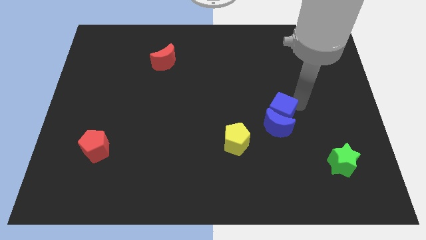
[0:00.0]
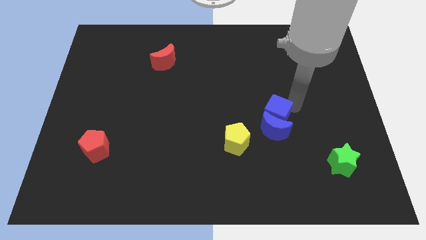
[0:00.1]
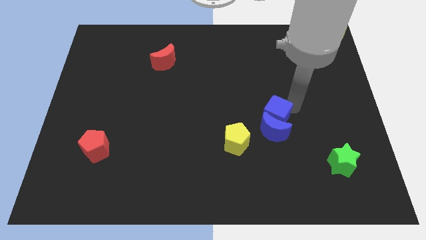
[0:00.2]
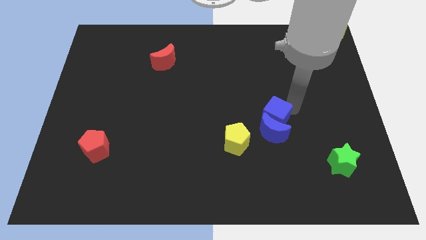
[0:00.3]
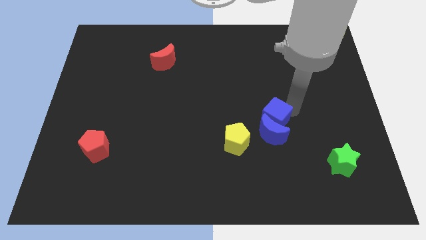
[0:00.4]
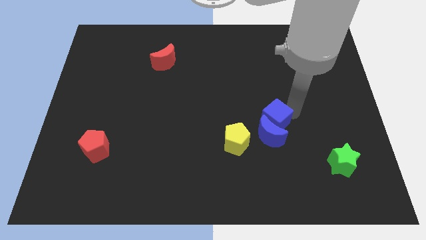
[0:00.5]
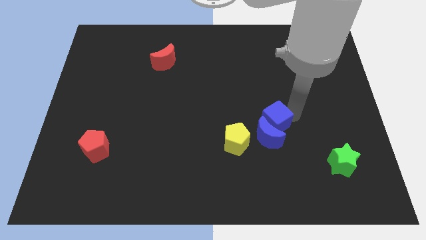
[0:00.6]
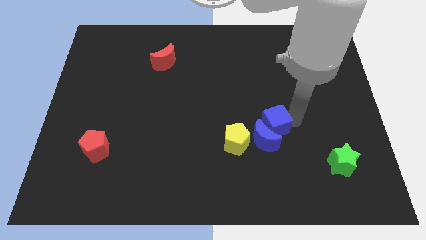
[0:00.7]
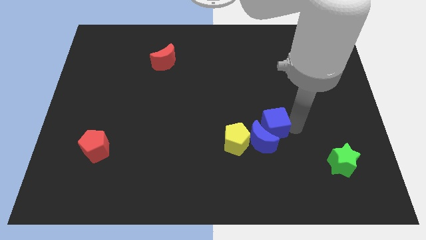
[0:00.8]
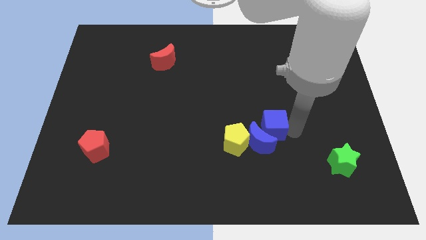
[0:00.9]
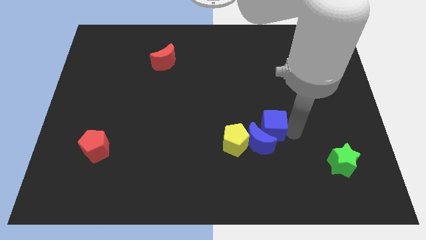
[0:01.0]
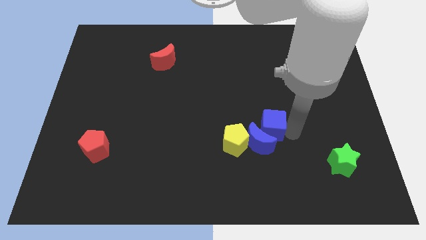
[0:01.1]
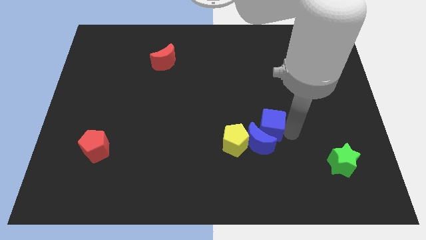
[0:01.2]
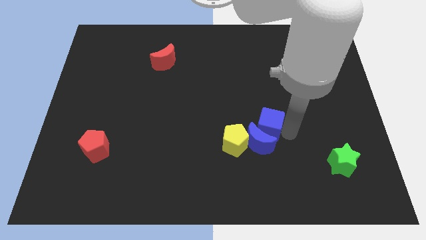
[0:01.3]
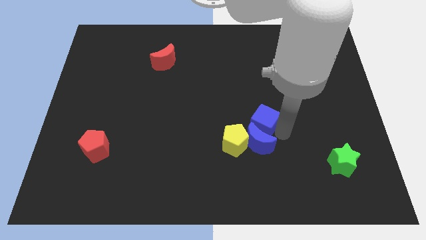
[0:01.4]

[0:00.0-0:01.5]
push the blue blocks slightly to the bottom

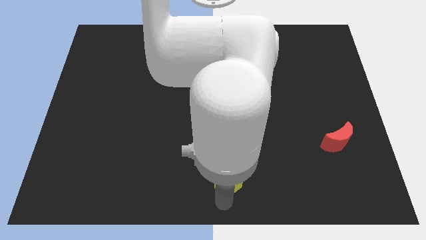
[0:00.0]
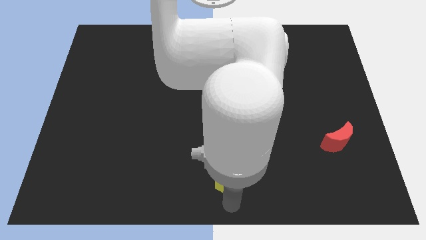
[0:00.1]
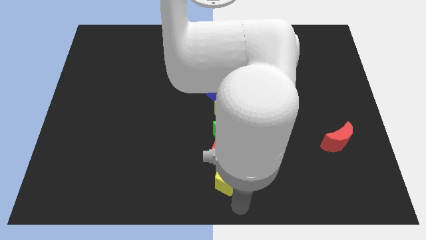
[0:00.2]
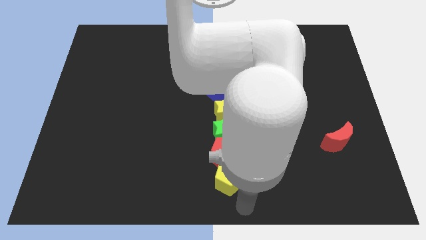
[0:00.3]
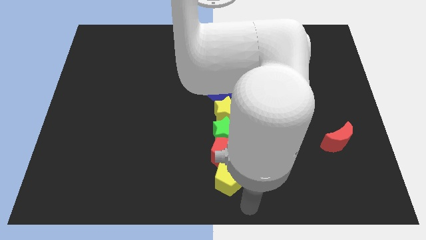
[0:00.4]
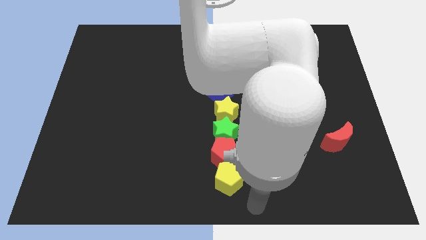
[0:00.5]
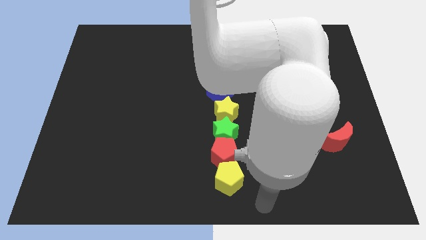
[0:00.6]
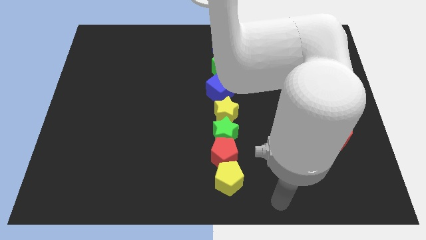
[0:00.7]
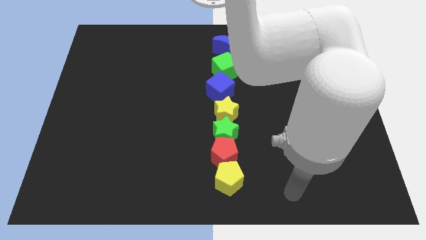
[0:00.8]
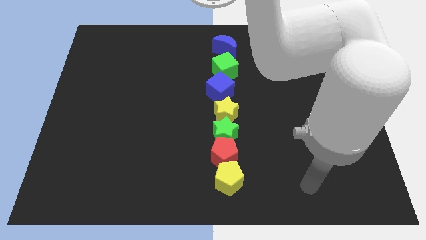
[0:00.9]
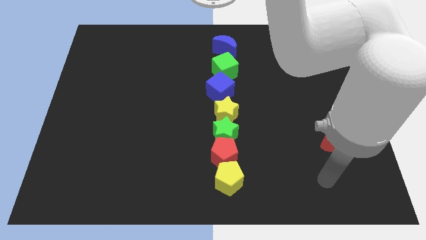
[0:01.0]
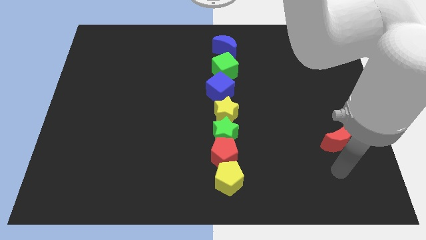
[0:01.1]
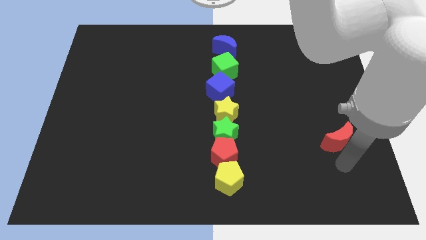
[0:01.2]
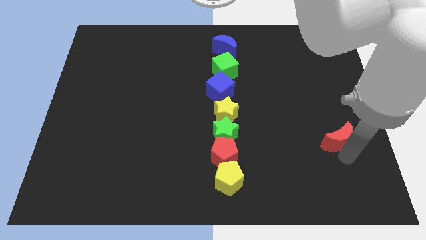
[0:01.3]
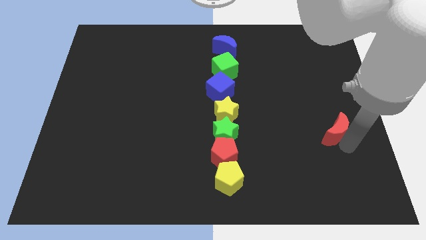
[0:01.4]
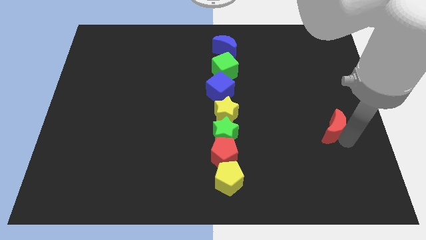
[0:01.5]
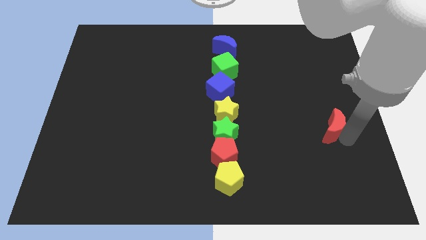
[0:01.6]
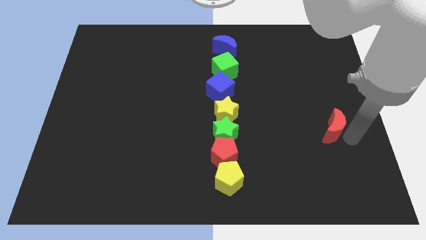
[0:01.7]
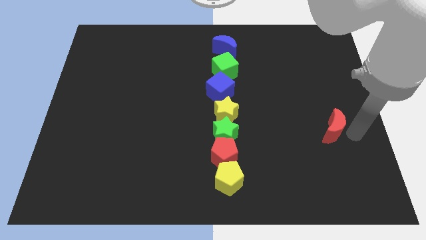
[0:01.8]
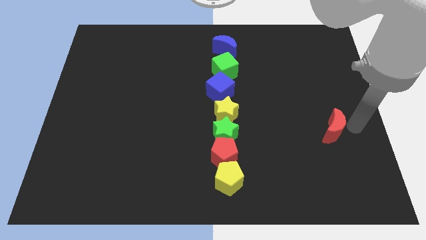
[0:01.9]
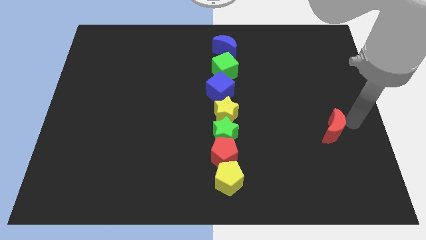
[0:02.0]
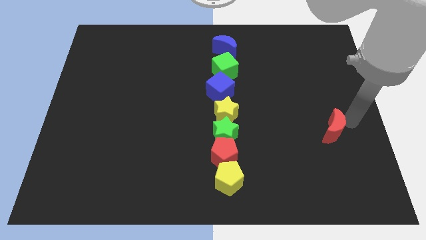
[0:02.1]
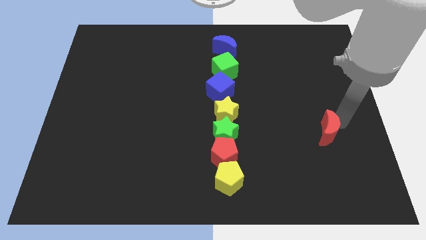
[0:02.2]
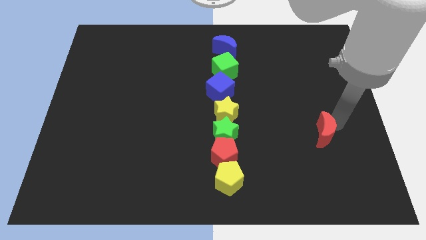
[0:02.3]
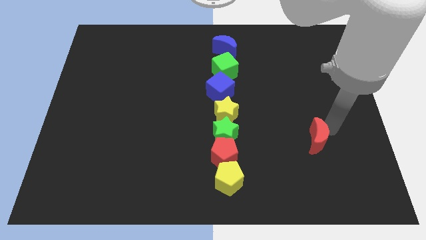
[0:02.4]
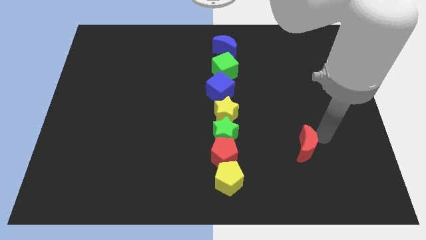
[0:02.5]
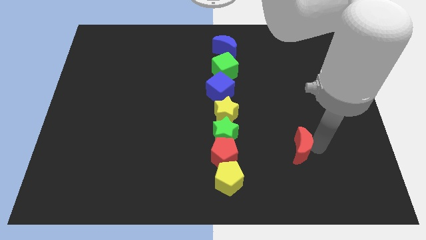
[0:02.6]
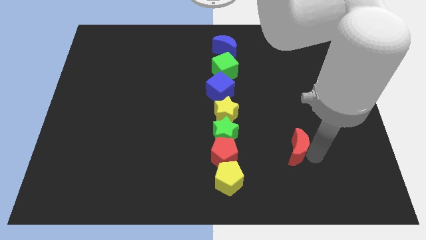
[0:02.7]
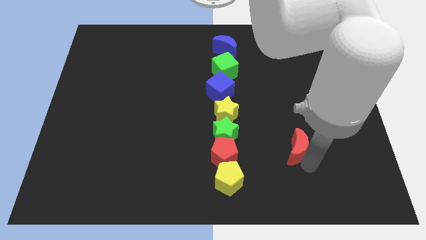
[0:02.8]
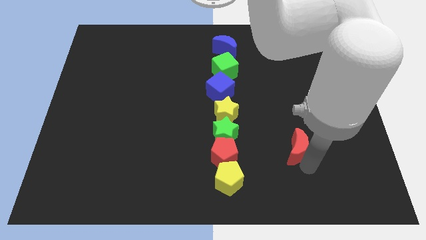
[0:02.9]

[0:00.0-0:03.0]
go near red moon

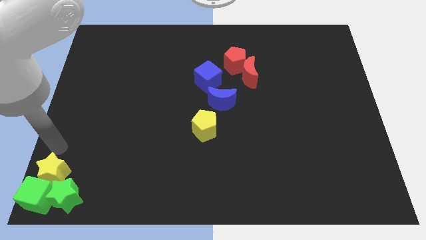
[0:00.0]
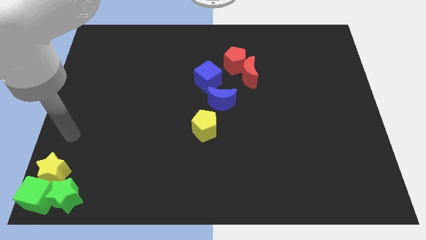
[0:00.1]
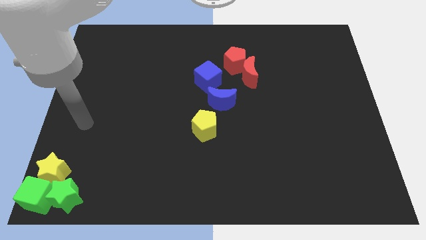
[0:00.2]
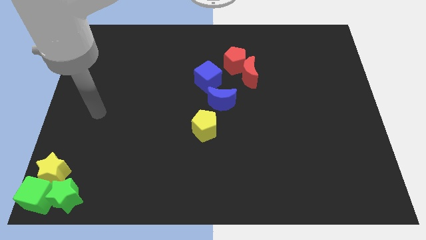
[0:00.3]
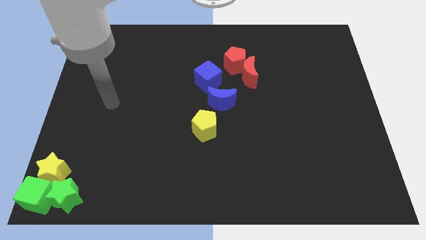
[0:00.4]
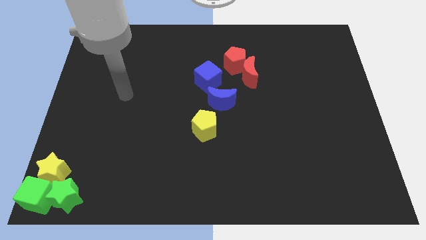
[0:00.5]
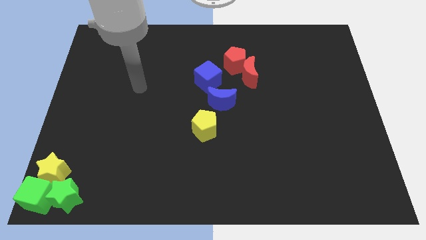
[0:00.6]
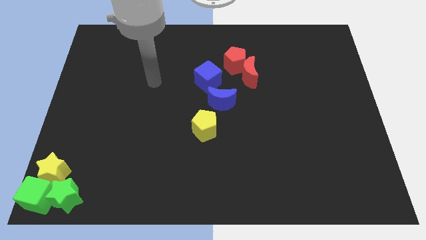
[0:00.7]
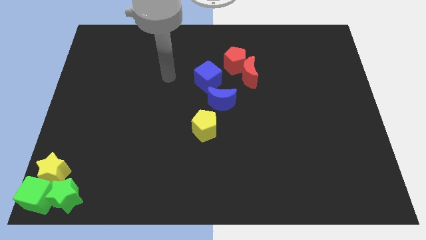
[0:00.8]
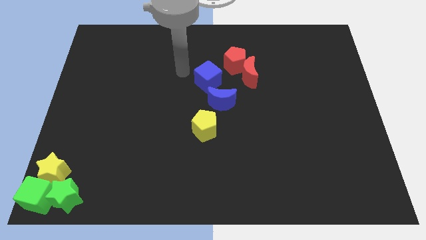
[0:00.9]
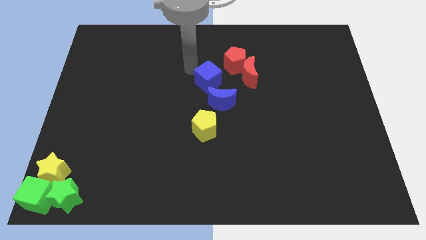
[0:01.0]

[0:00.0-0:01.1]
slide your arm away from yellow star

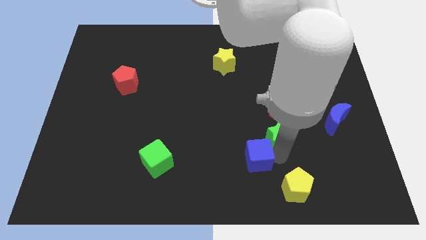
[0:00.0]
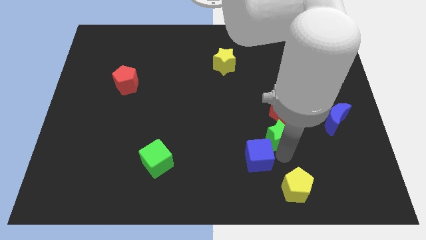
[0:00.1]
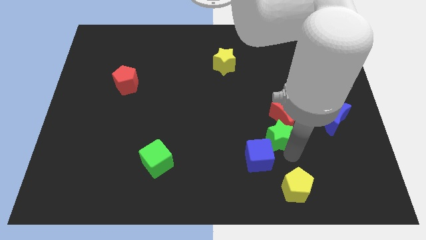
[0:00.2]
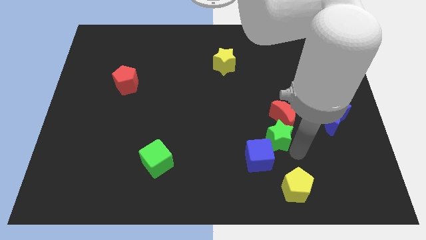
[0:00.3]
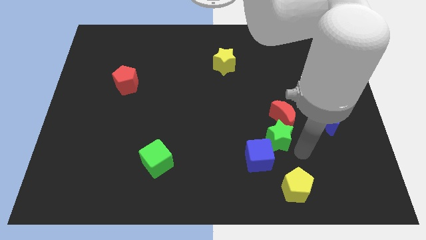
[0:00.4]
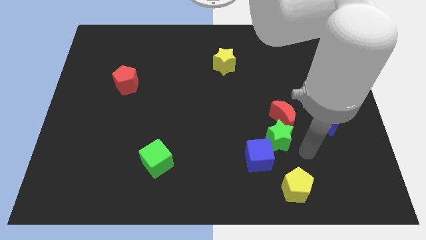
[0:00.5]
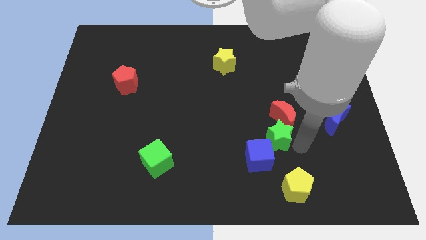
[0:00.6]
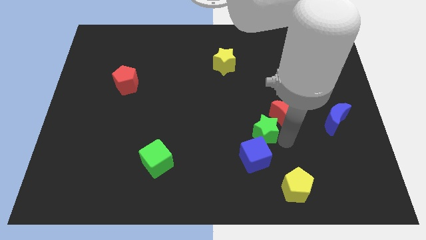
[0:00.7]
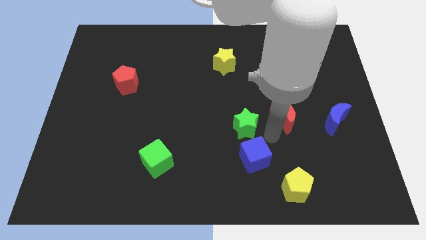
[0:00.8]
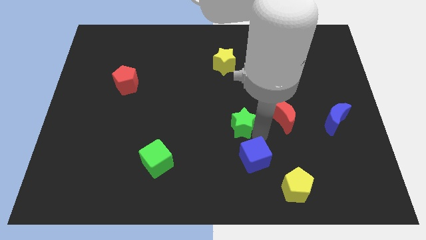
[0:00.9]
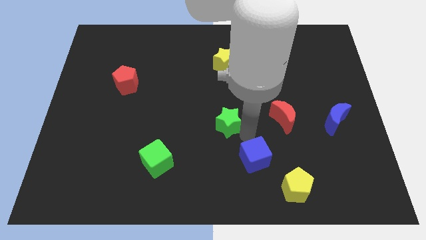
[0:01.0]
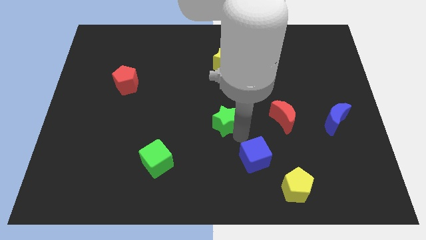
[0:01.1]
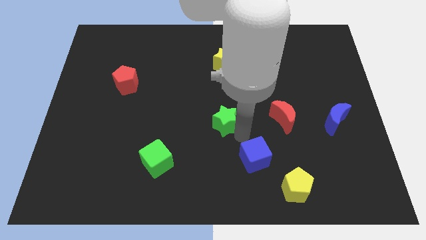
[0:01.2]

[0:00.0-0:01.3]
move the green star to the left of the red crescent

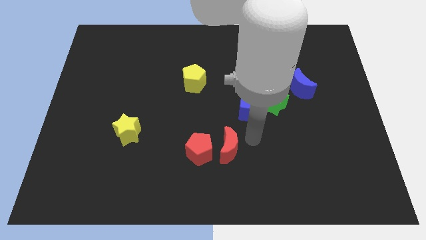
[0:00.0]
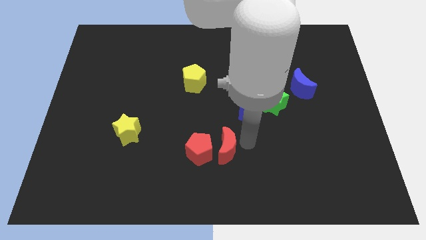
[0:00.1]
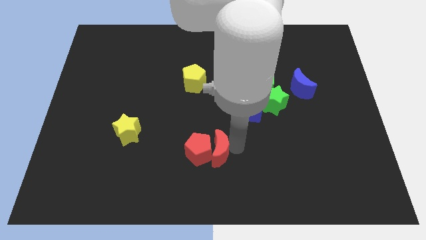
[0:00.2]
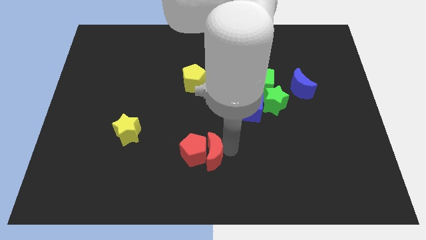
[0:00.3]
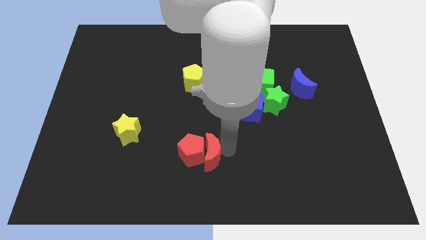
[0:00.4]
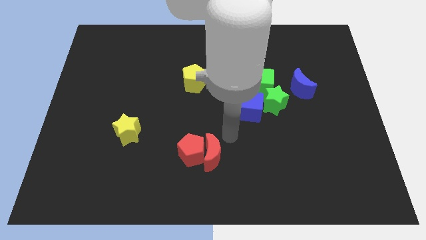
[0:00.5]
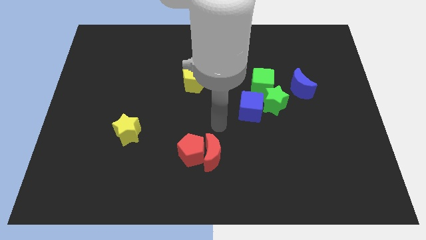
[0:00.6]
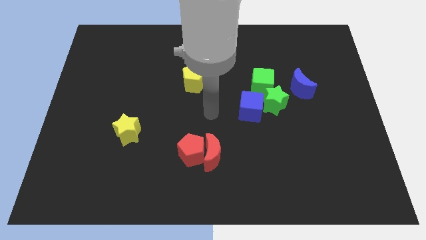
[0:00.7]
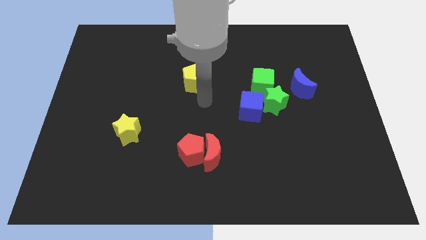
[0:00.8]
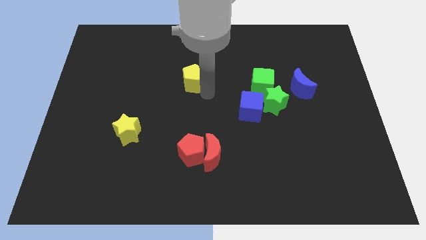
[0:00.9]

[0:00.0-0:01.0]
push the red moon into the red pentagon

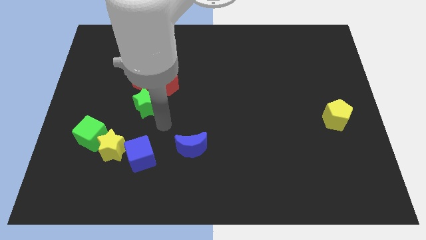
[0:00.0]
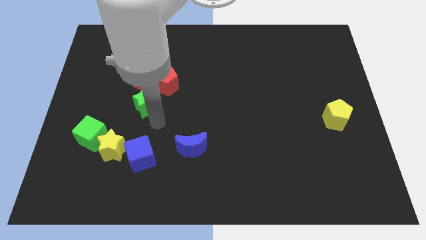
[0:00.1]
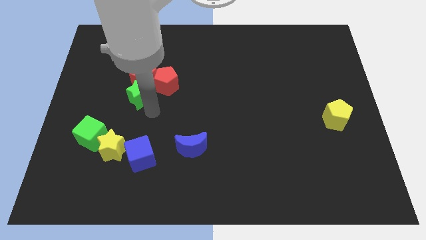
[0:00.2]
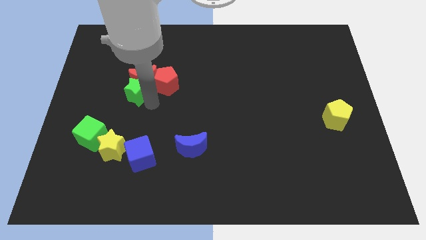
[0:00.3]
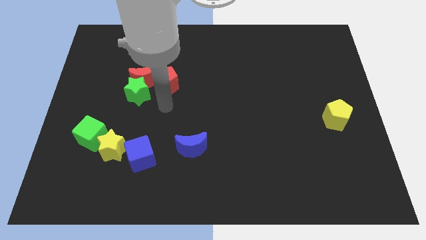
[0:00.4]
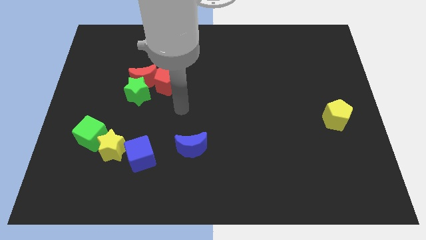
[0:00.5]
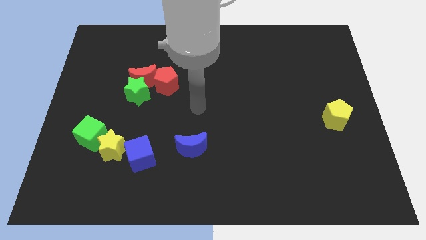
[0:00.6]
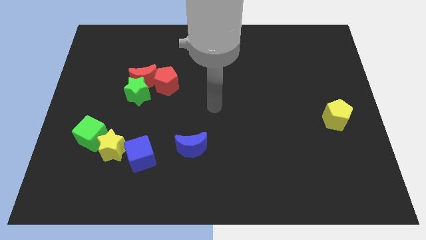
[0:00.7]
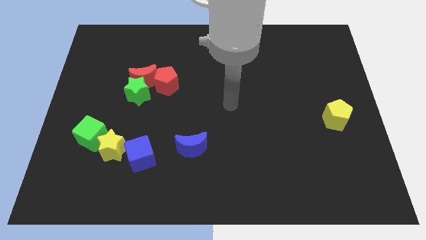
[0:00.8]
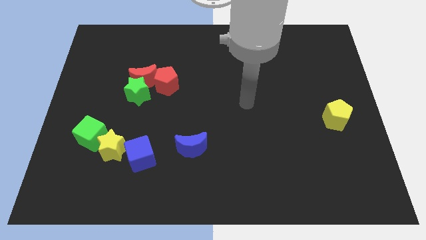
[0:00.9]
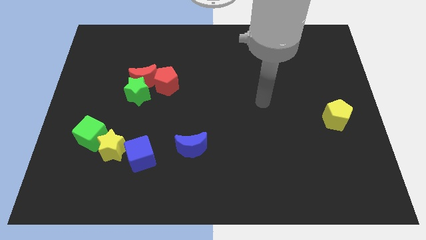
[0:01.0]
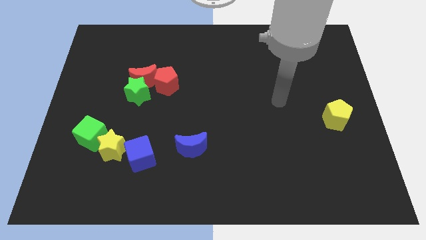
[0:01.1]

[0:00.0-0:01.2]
push the green star to the bottom side of the red crescent
